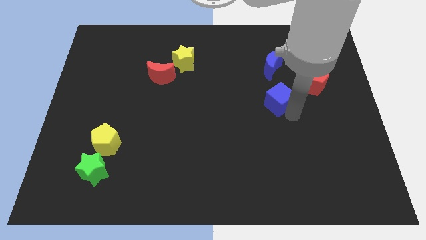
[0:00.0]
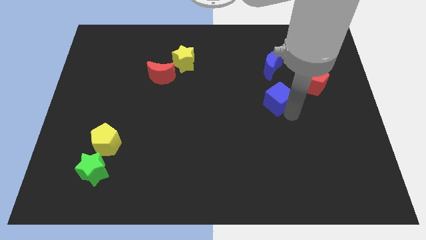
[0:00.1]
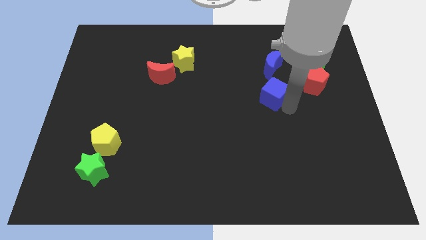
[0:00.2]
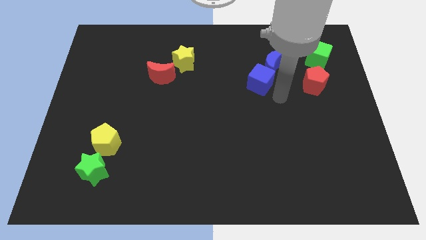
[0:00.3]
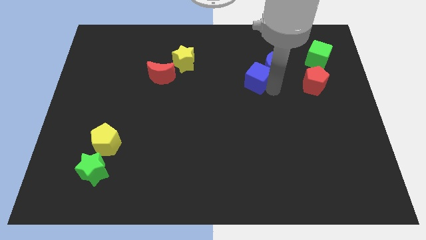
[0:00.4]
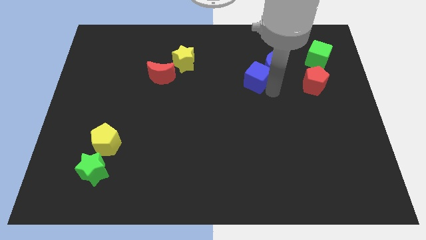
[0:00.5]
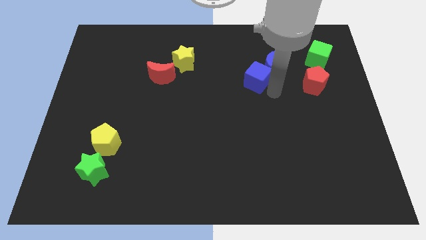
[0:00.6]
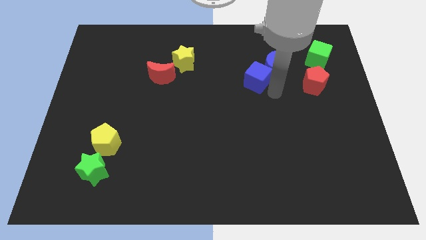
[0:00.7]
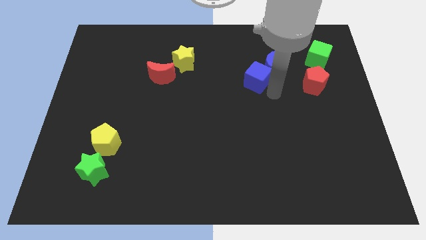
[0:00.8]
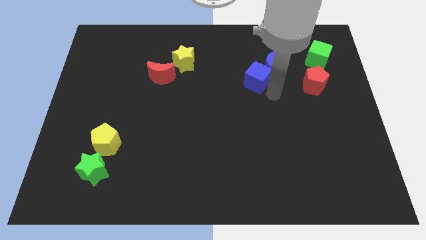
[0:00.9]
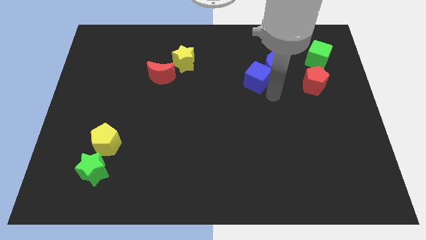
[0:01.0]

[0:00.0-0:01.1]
move blue cube into blue moon

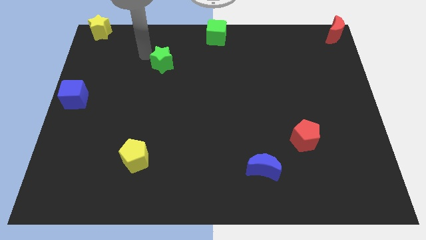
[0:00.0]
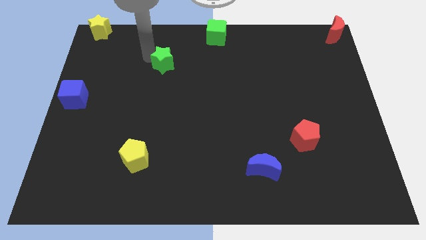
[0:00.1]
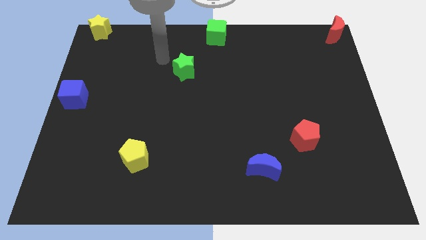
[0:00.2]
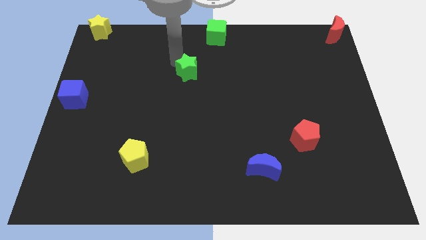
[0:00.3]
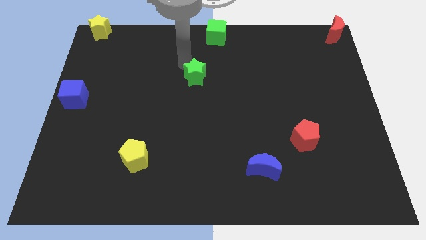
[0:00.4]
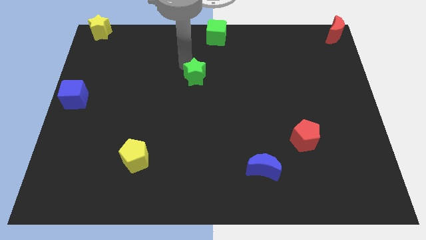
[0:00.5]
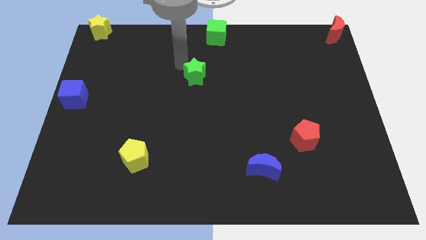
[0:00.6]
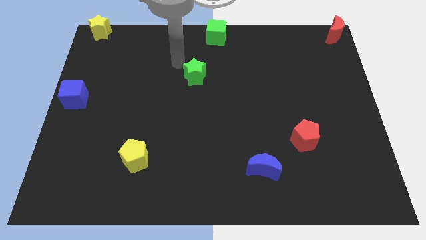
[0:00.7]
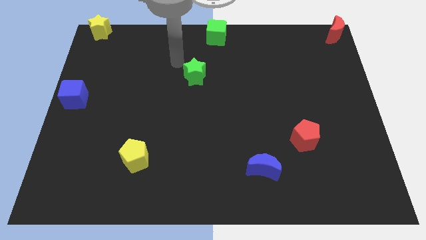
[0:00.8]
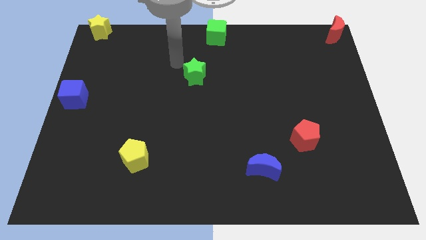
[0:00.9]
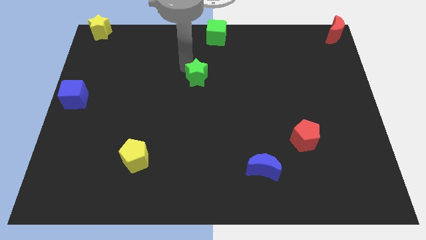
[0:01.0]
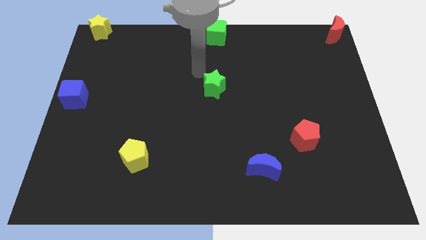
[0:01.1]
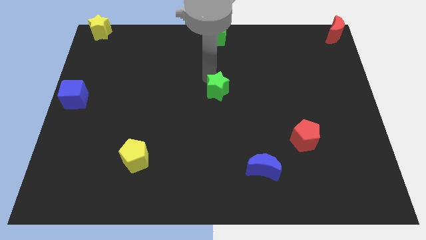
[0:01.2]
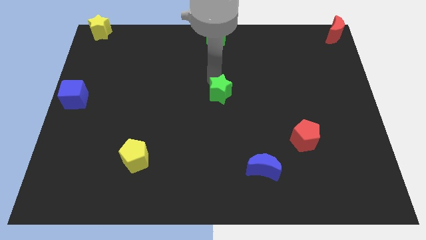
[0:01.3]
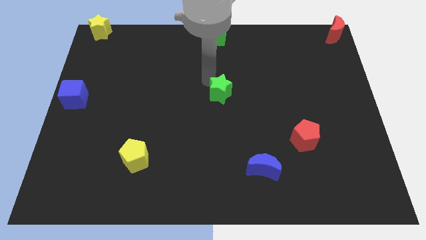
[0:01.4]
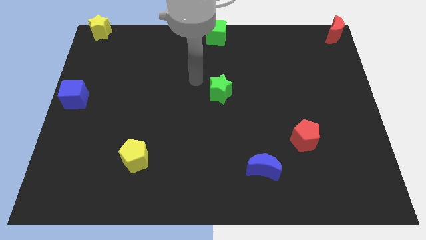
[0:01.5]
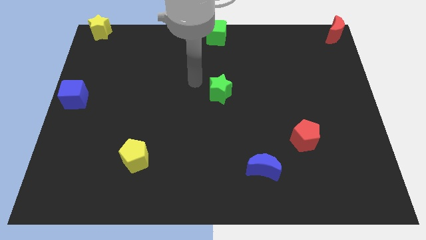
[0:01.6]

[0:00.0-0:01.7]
put the green star at the center of the board

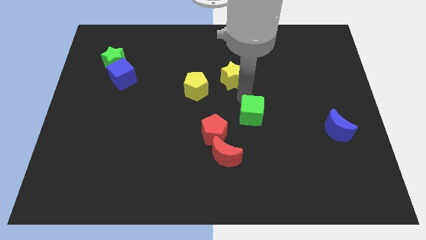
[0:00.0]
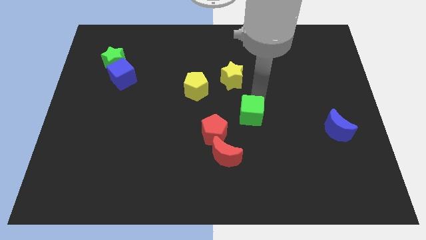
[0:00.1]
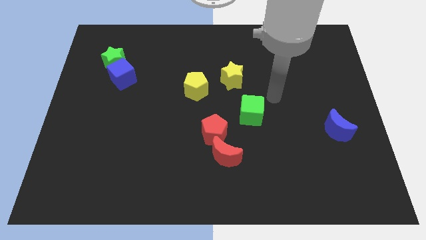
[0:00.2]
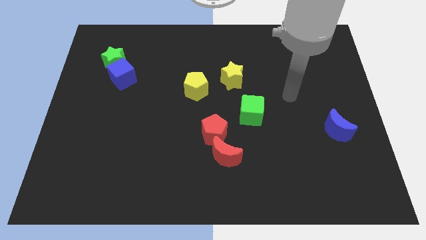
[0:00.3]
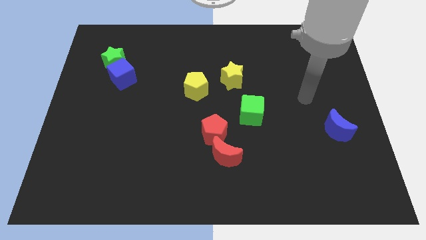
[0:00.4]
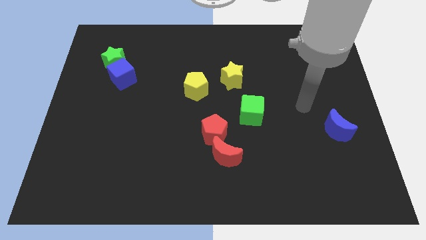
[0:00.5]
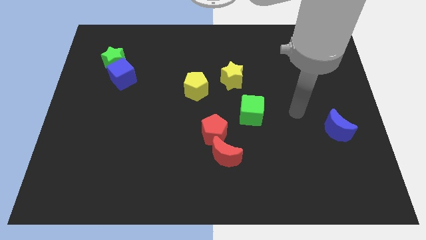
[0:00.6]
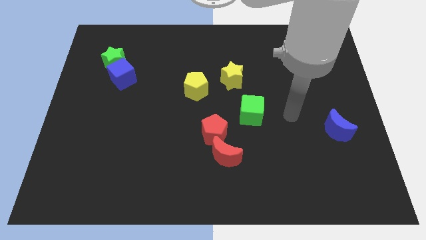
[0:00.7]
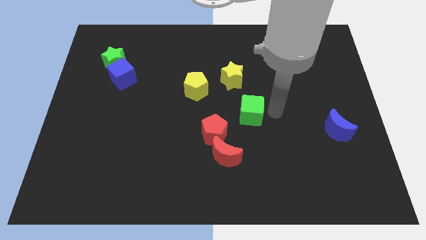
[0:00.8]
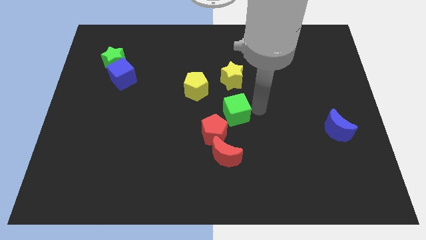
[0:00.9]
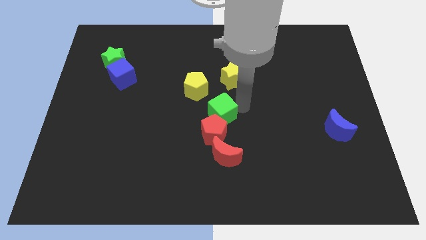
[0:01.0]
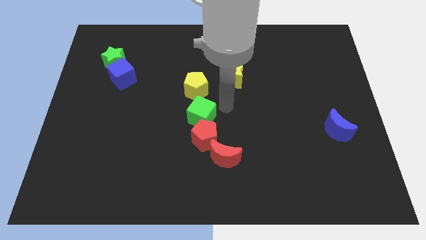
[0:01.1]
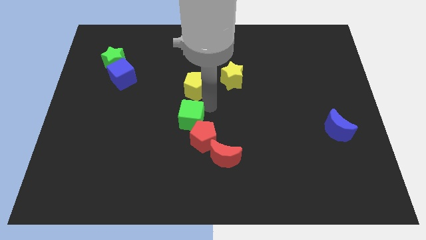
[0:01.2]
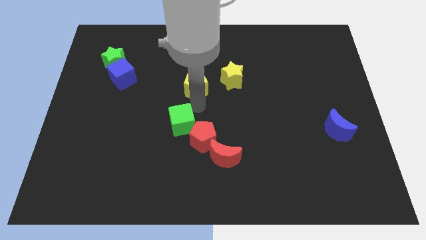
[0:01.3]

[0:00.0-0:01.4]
place green cube diagonally top of the red pentagon

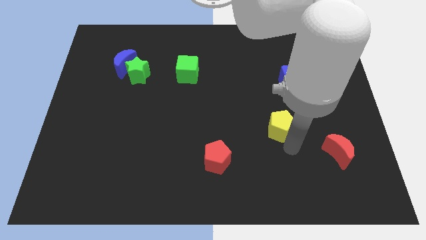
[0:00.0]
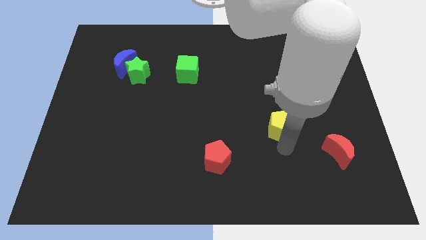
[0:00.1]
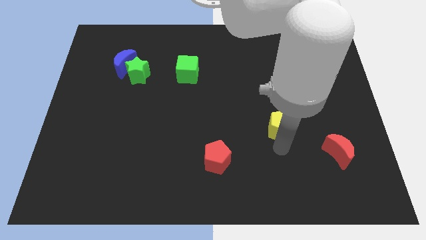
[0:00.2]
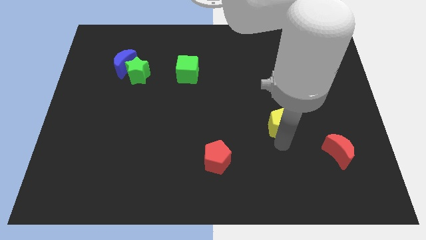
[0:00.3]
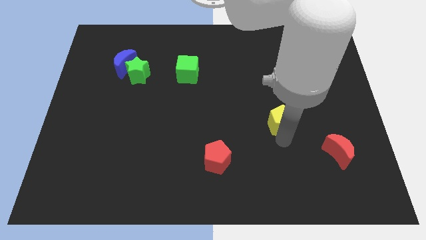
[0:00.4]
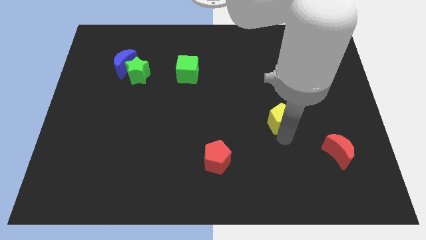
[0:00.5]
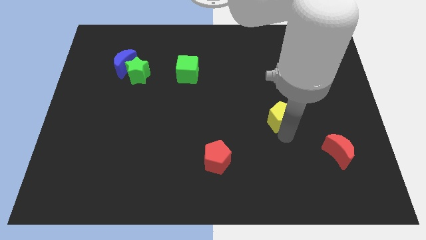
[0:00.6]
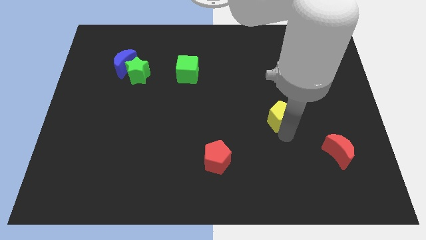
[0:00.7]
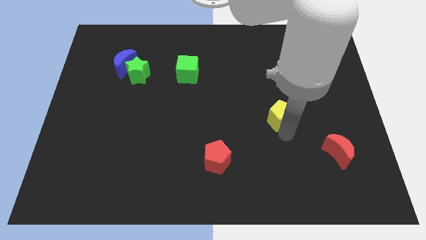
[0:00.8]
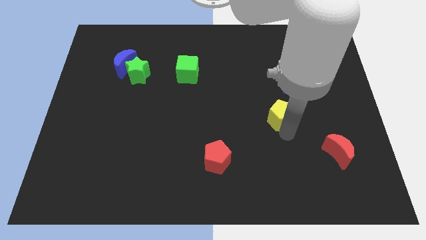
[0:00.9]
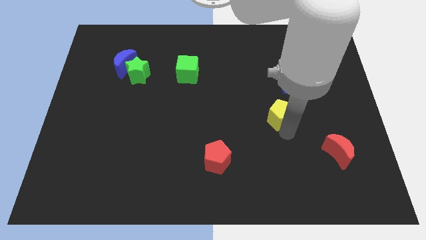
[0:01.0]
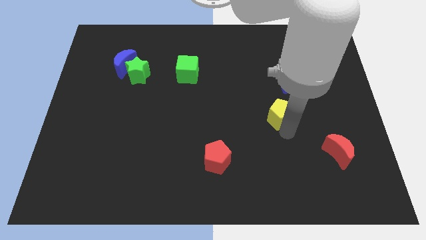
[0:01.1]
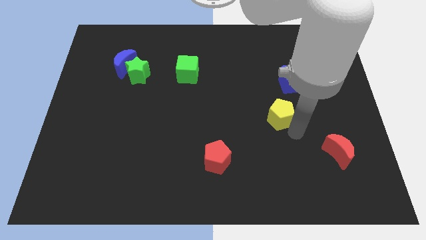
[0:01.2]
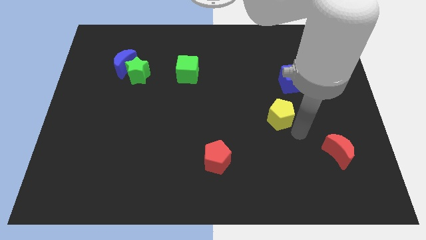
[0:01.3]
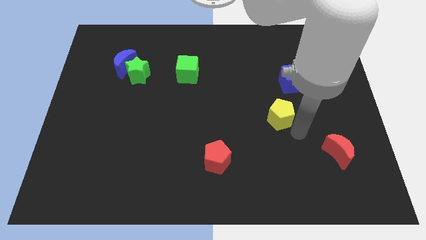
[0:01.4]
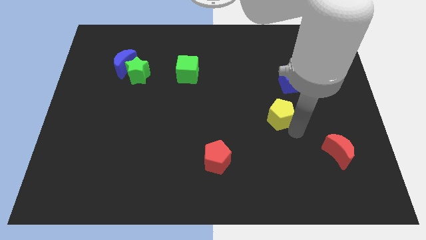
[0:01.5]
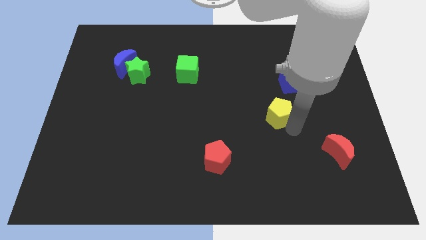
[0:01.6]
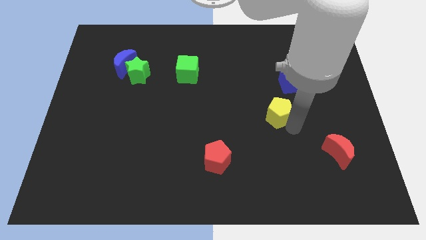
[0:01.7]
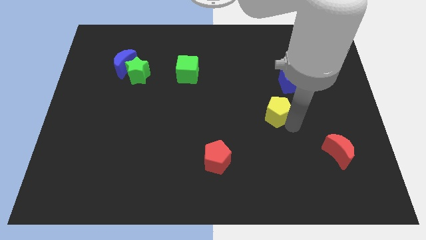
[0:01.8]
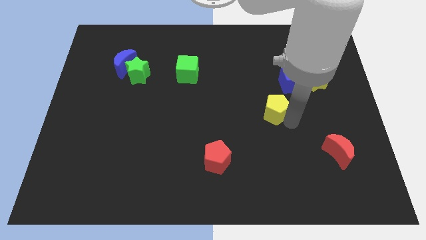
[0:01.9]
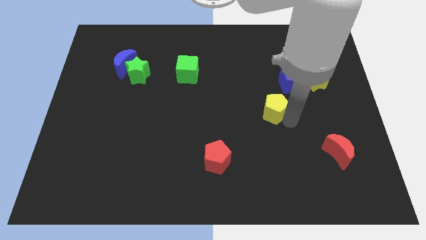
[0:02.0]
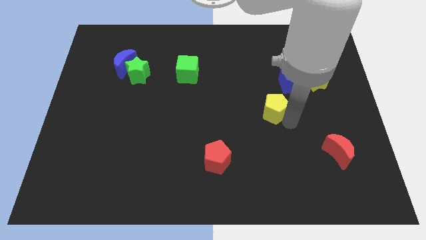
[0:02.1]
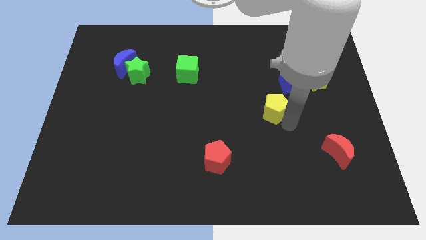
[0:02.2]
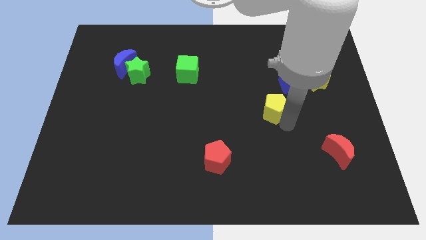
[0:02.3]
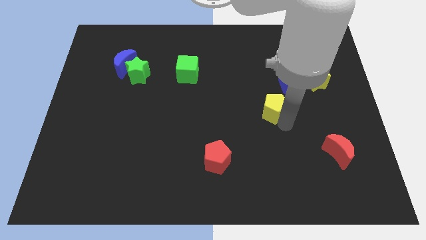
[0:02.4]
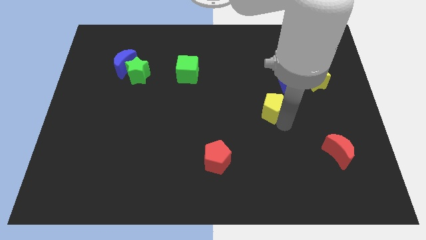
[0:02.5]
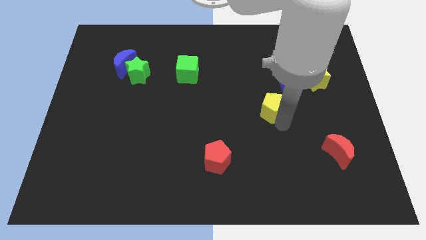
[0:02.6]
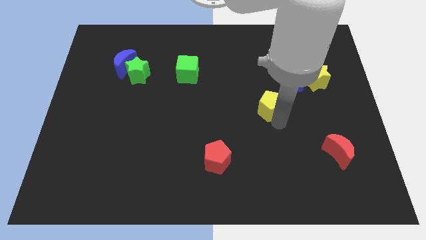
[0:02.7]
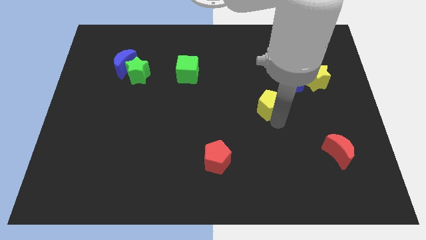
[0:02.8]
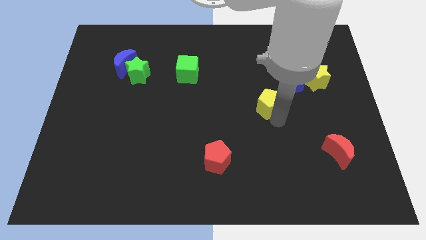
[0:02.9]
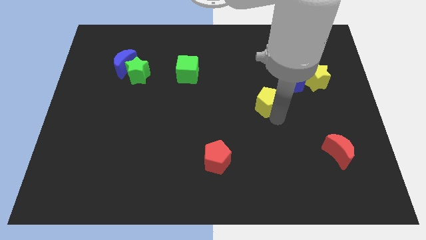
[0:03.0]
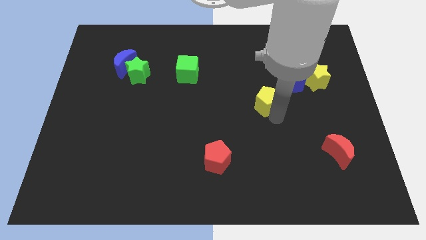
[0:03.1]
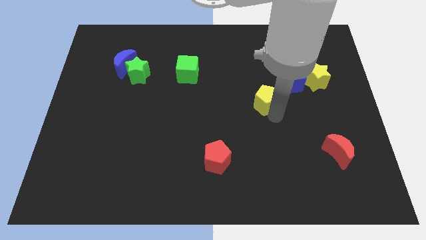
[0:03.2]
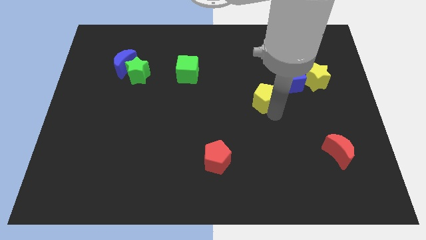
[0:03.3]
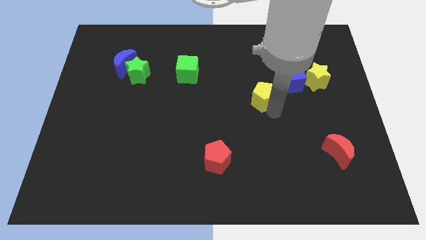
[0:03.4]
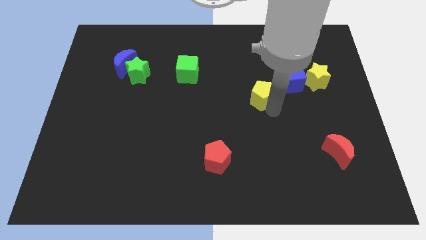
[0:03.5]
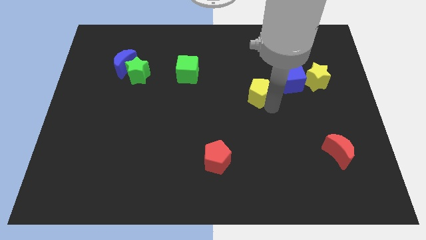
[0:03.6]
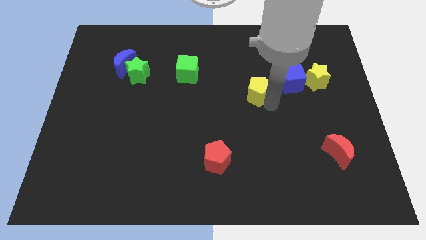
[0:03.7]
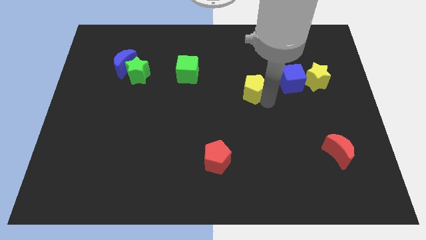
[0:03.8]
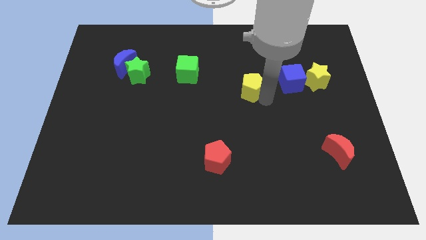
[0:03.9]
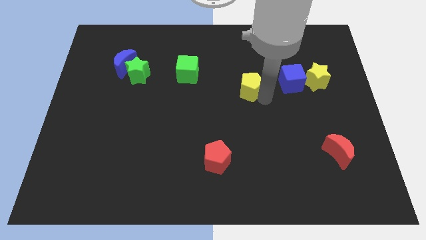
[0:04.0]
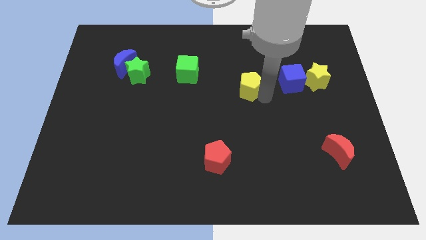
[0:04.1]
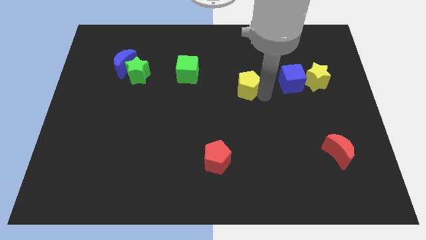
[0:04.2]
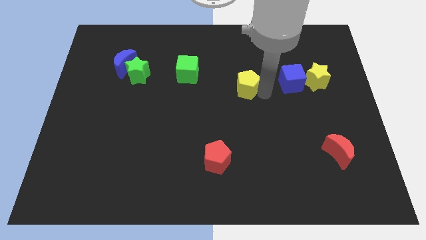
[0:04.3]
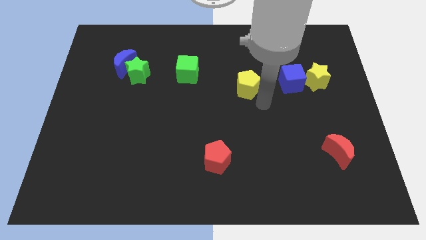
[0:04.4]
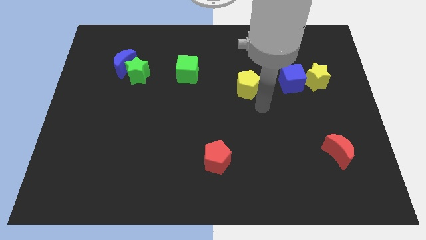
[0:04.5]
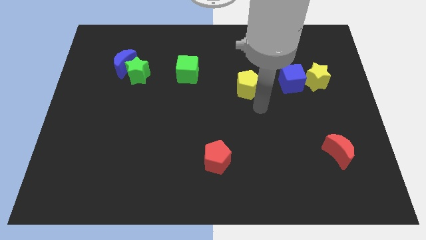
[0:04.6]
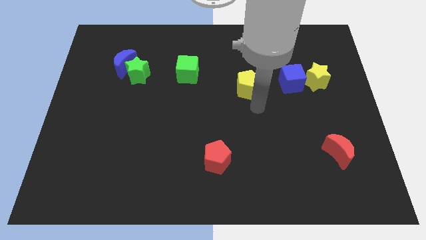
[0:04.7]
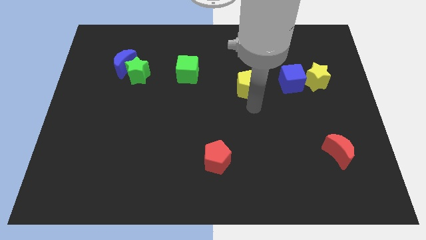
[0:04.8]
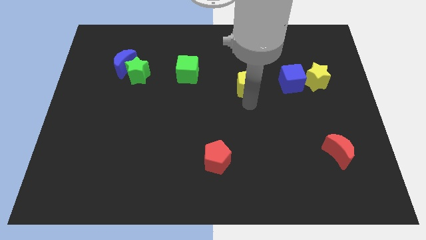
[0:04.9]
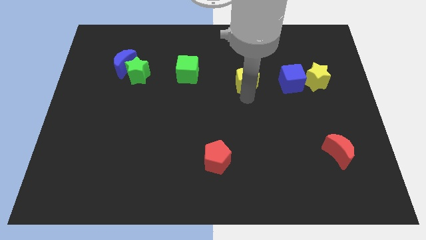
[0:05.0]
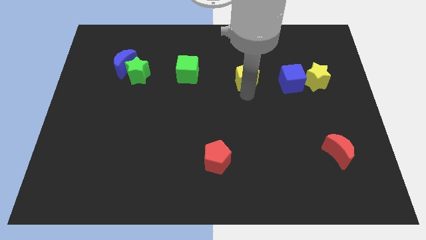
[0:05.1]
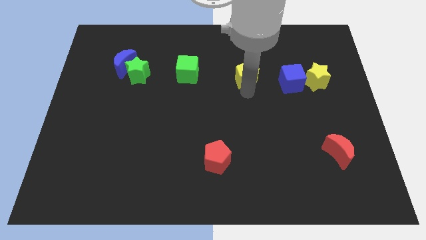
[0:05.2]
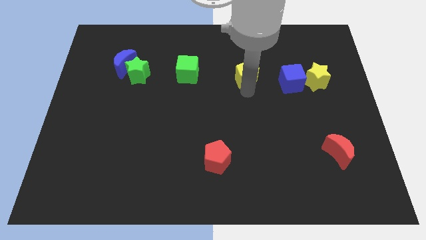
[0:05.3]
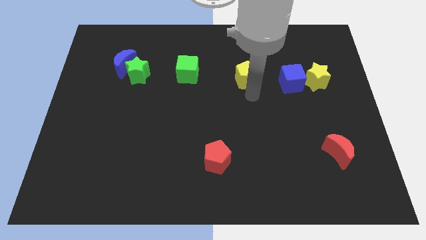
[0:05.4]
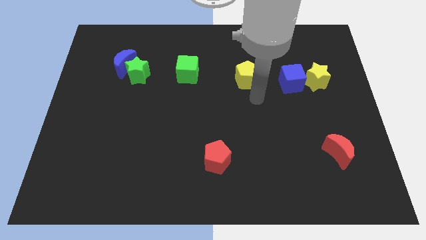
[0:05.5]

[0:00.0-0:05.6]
put the yellow pentagon to the left of the blue cube
